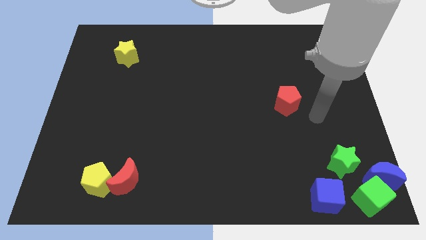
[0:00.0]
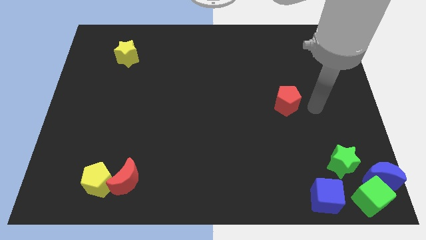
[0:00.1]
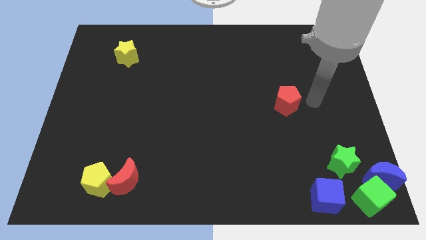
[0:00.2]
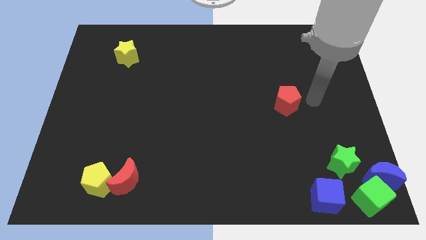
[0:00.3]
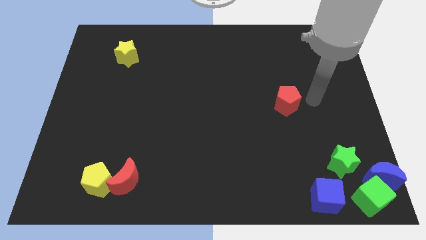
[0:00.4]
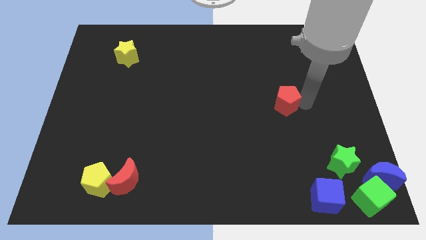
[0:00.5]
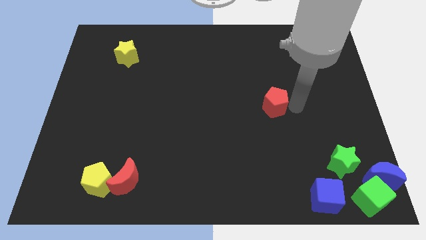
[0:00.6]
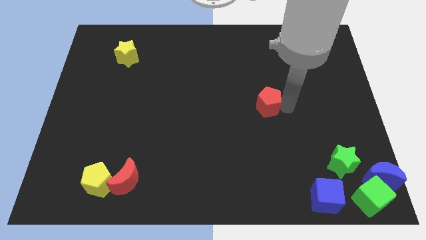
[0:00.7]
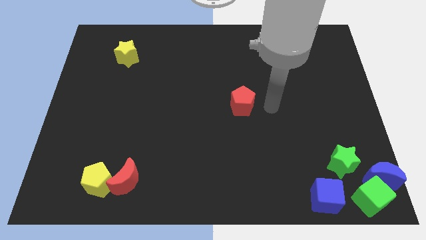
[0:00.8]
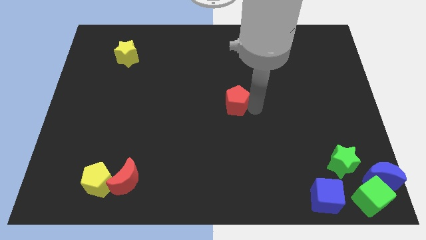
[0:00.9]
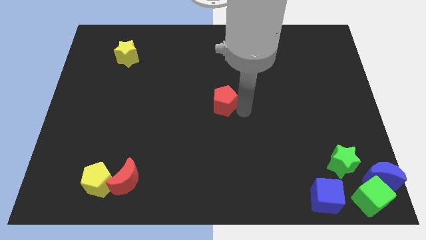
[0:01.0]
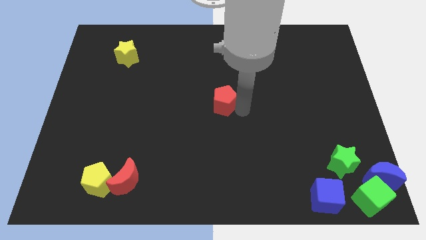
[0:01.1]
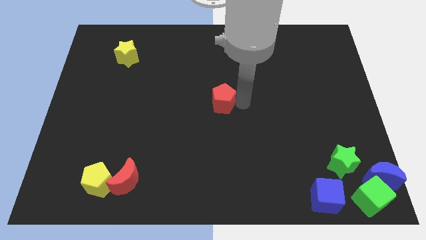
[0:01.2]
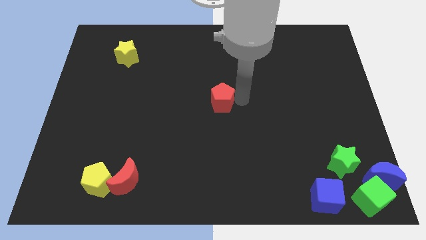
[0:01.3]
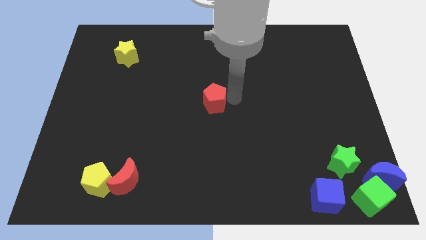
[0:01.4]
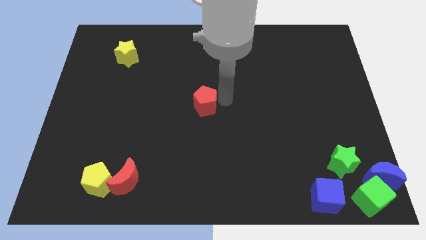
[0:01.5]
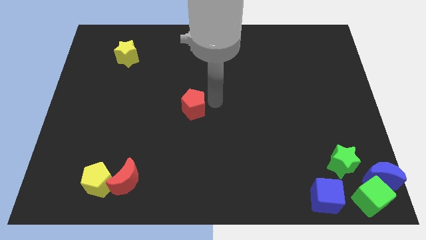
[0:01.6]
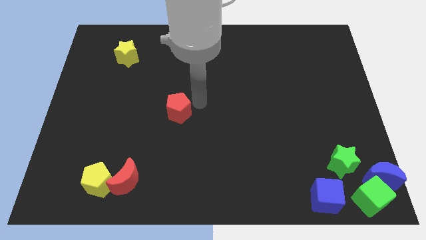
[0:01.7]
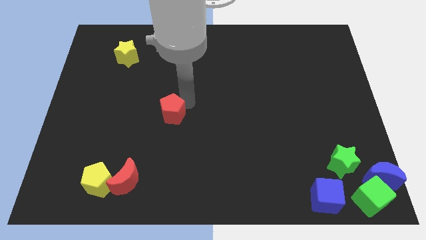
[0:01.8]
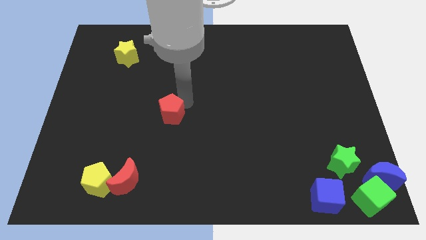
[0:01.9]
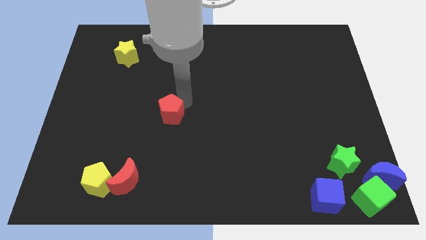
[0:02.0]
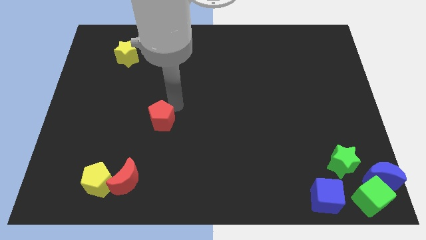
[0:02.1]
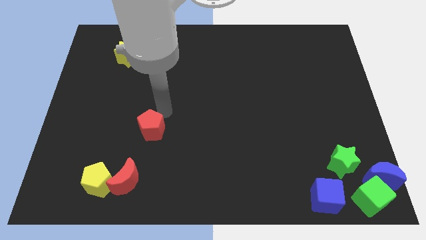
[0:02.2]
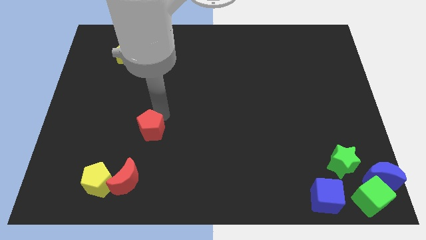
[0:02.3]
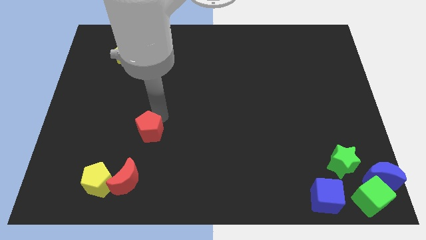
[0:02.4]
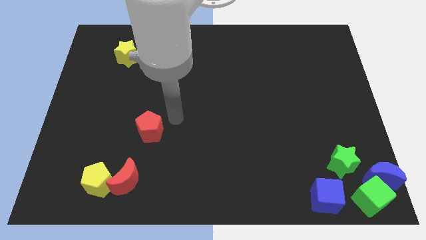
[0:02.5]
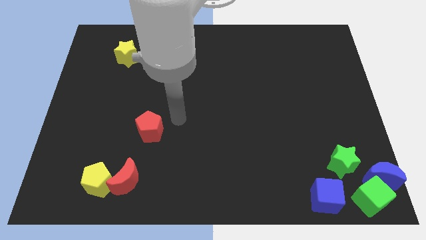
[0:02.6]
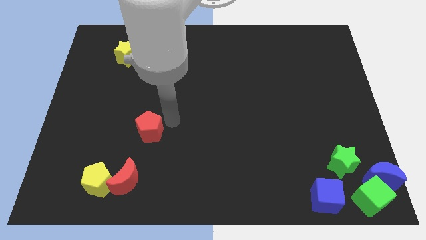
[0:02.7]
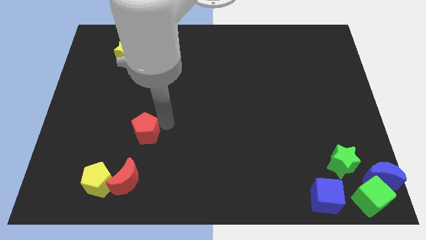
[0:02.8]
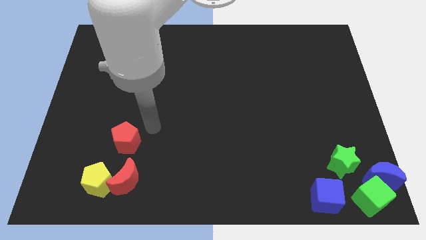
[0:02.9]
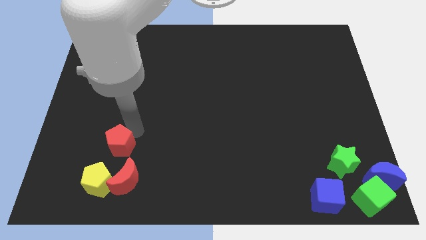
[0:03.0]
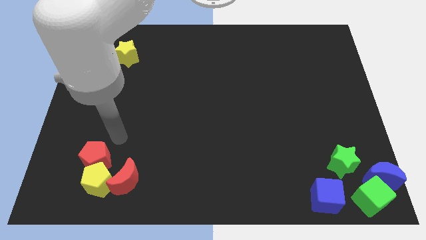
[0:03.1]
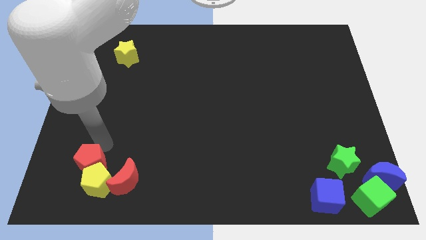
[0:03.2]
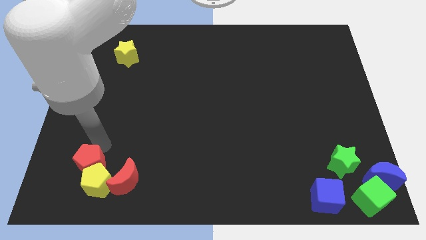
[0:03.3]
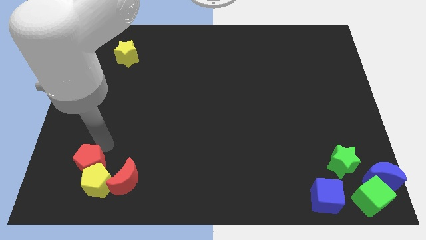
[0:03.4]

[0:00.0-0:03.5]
slide the red pentagon into the top left of the yellow pentagon

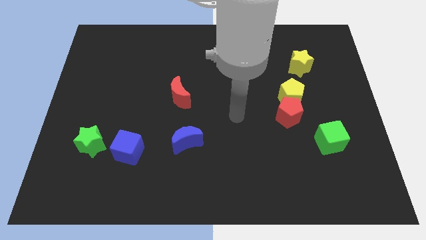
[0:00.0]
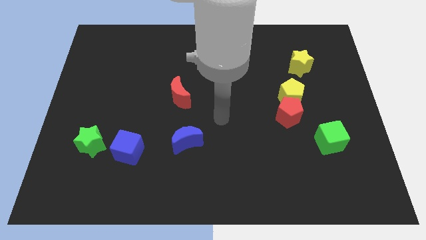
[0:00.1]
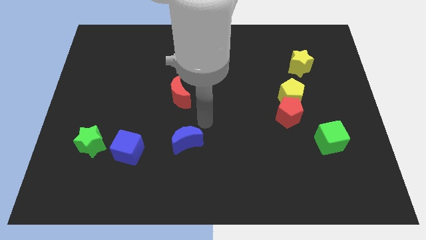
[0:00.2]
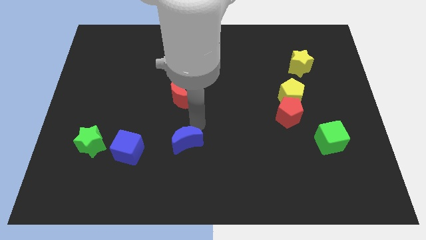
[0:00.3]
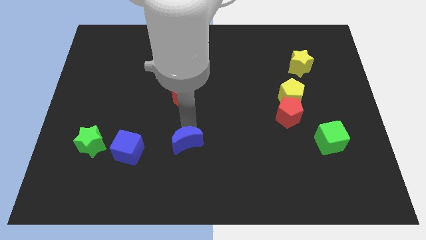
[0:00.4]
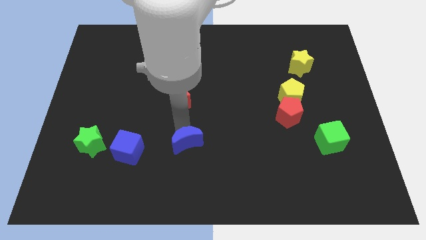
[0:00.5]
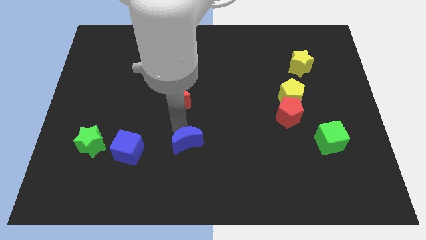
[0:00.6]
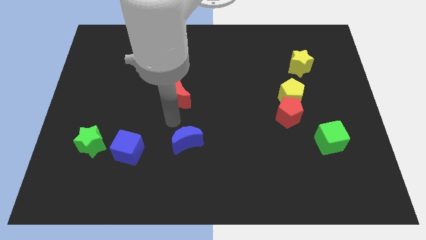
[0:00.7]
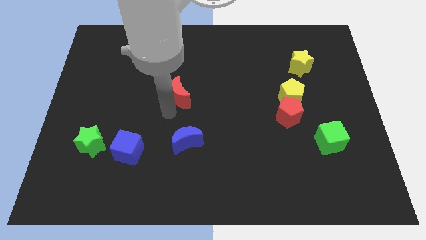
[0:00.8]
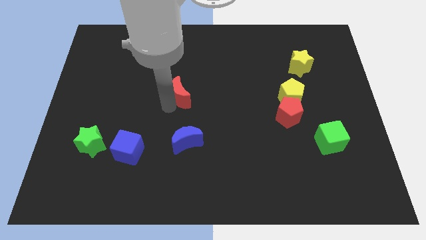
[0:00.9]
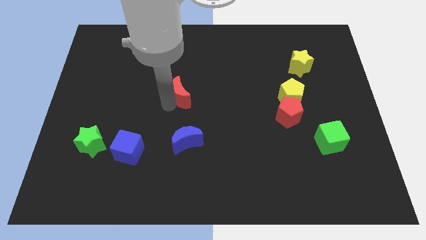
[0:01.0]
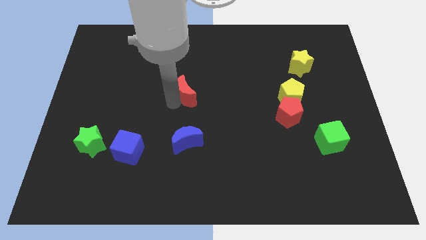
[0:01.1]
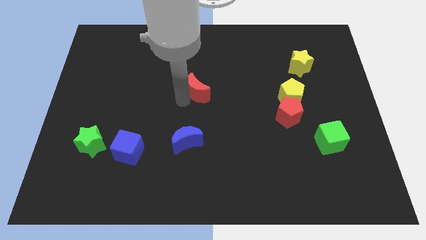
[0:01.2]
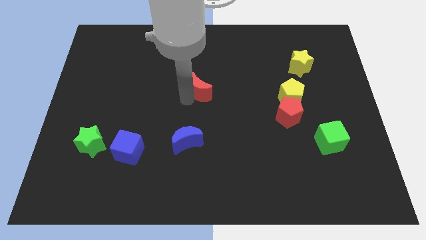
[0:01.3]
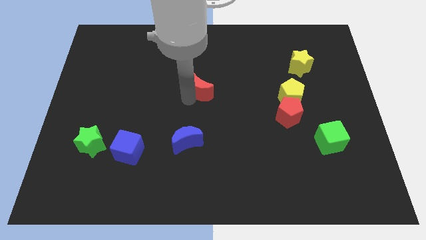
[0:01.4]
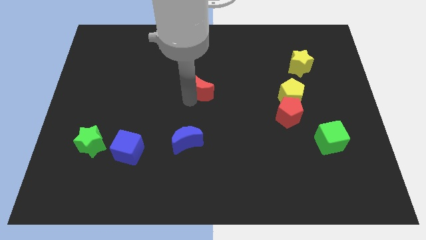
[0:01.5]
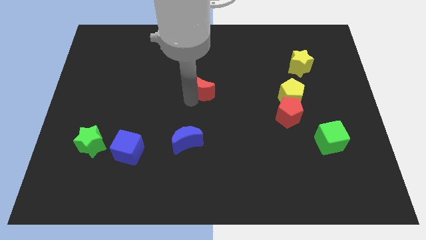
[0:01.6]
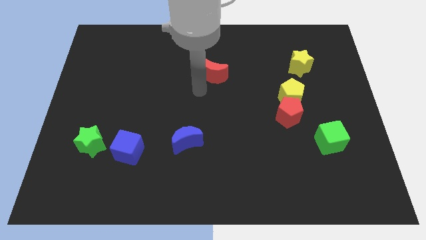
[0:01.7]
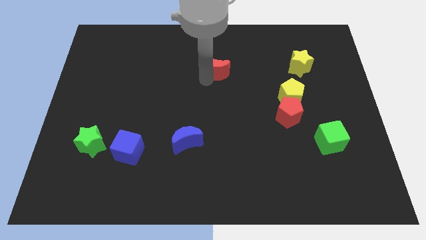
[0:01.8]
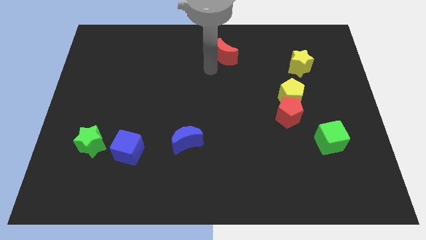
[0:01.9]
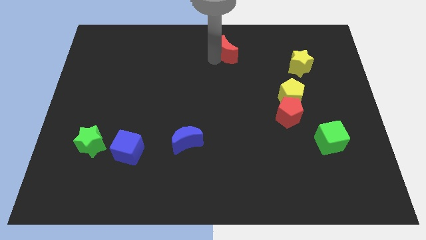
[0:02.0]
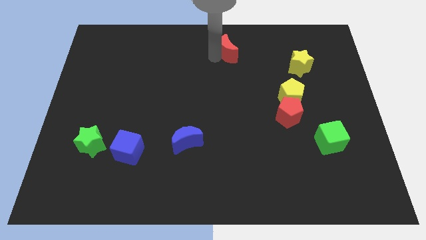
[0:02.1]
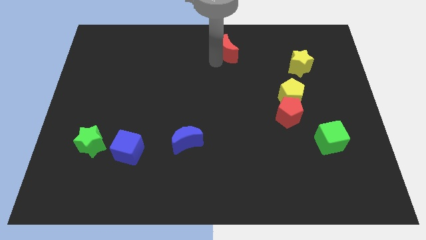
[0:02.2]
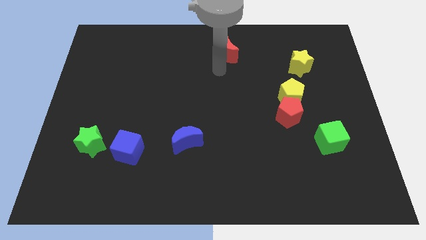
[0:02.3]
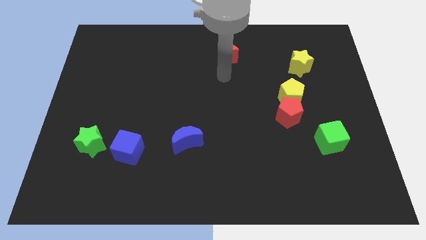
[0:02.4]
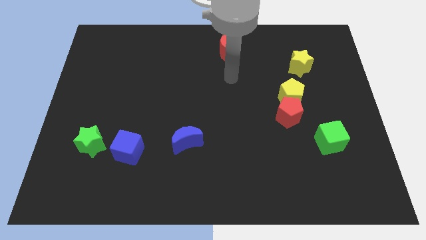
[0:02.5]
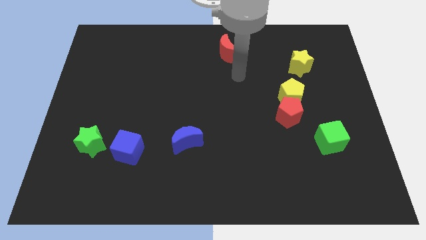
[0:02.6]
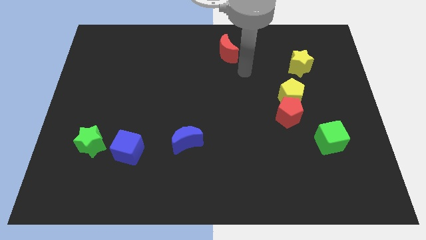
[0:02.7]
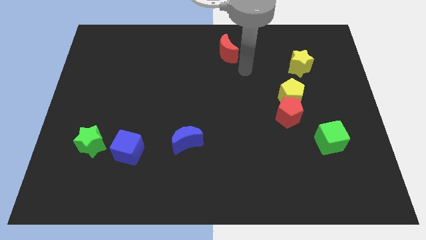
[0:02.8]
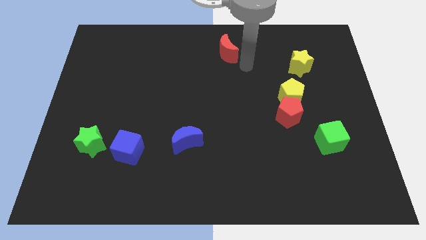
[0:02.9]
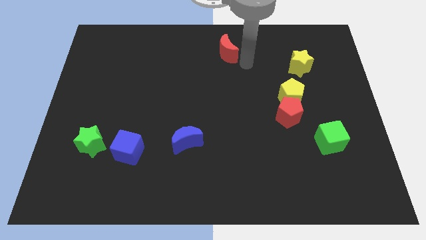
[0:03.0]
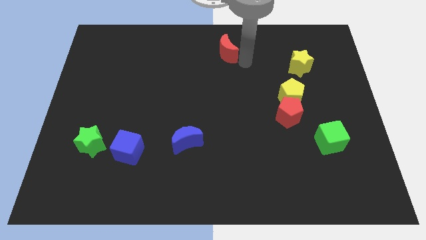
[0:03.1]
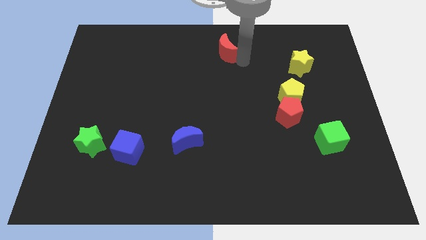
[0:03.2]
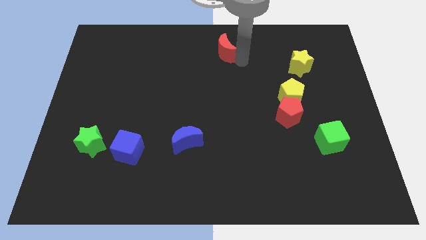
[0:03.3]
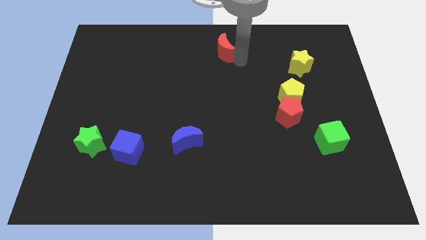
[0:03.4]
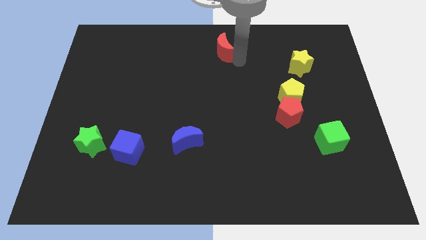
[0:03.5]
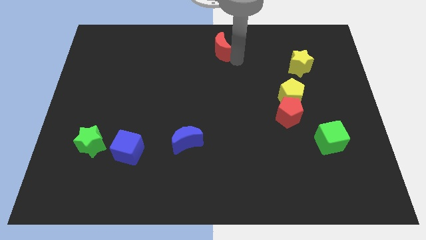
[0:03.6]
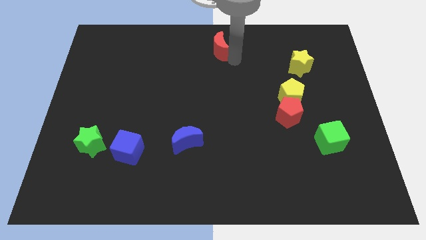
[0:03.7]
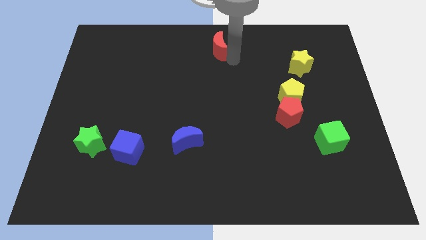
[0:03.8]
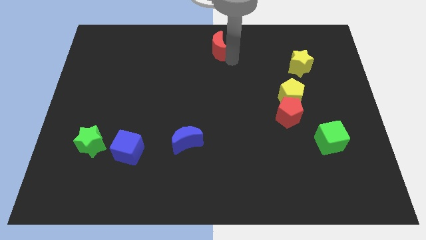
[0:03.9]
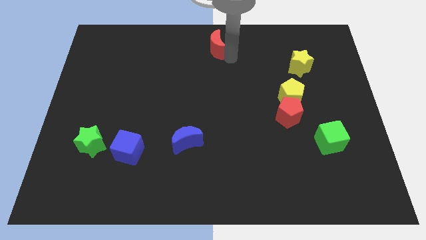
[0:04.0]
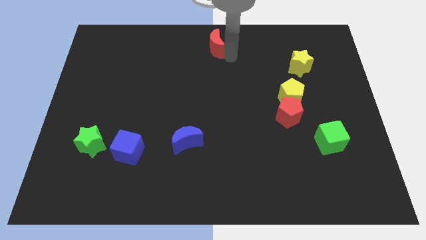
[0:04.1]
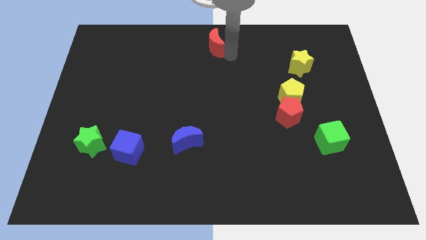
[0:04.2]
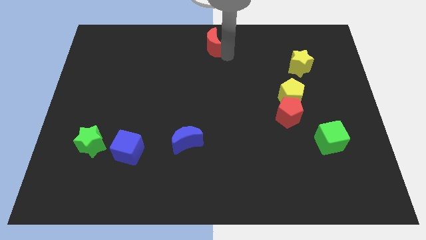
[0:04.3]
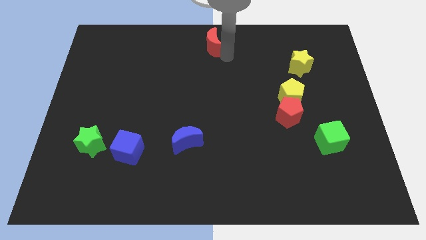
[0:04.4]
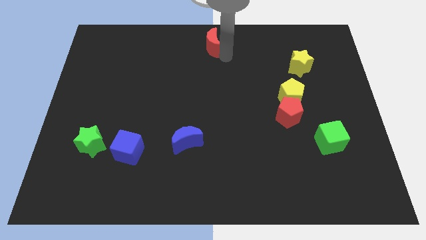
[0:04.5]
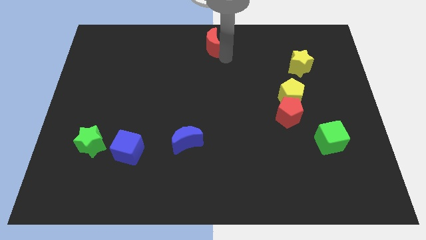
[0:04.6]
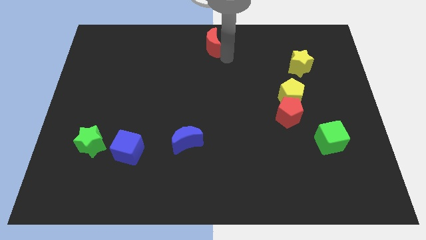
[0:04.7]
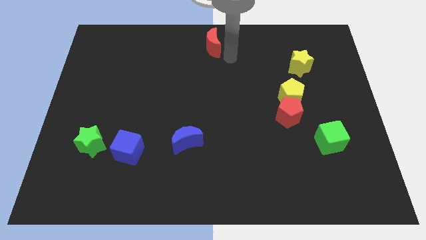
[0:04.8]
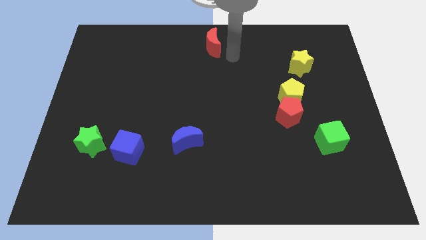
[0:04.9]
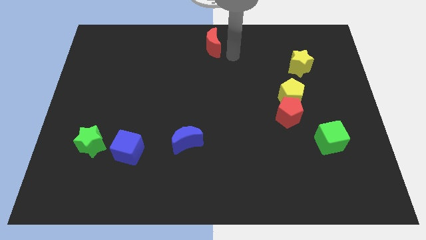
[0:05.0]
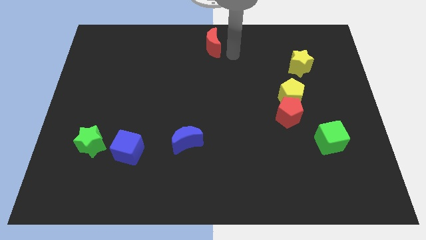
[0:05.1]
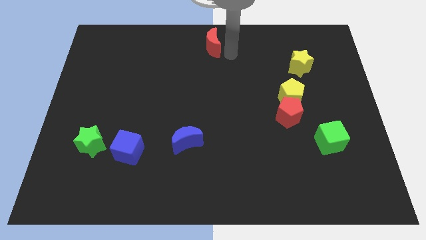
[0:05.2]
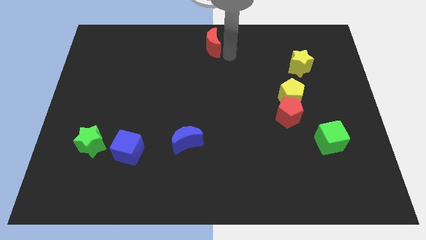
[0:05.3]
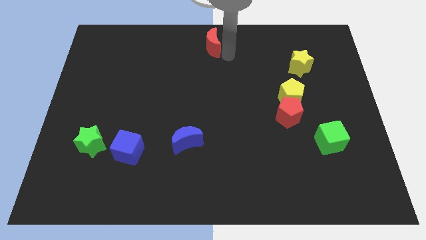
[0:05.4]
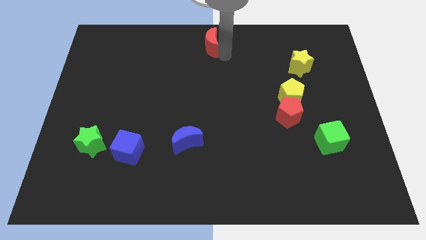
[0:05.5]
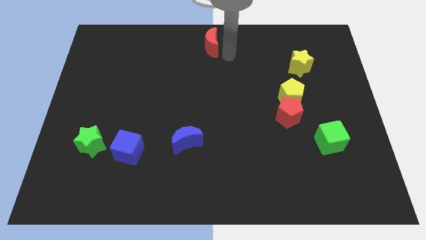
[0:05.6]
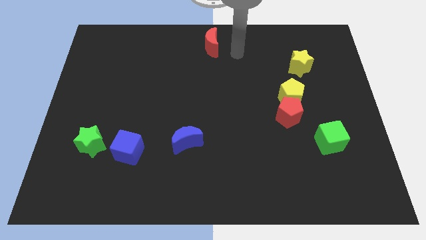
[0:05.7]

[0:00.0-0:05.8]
move the red moon to the top center of the board
